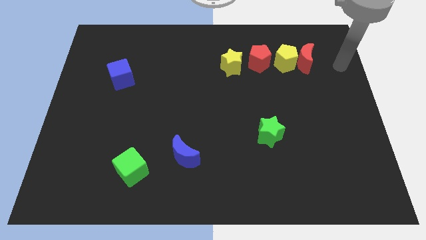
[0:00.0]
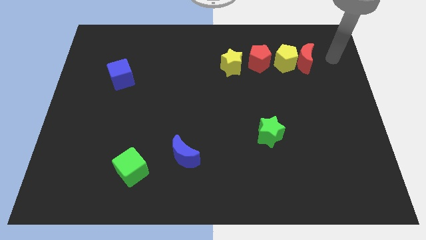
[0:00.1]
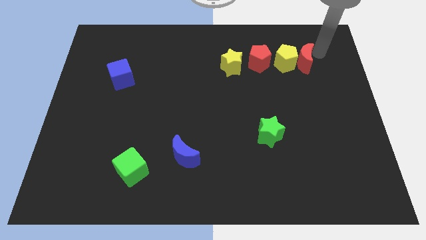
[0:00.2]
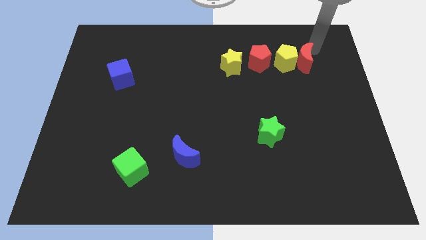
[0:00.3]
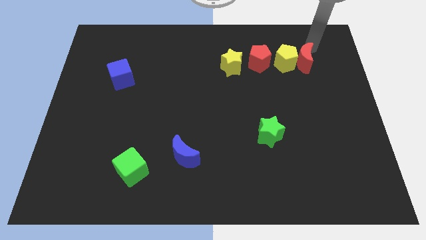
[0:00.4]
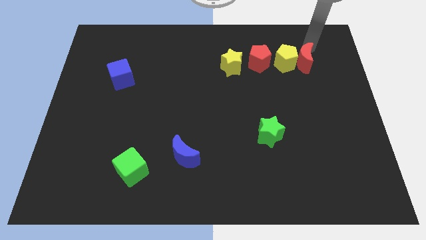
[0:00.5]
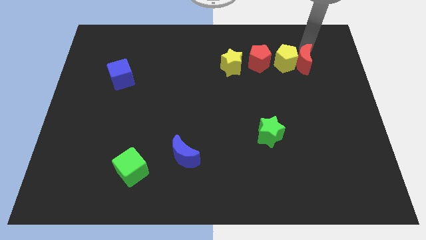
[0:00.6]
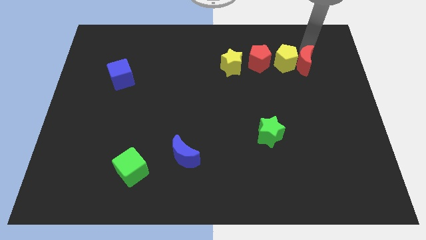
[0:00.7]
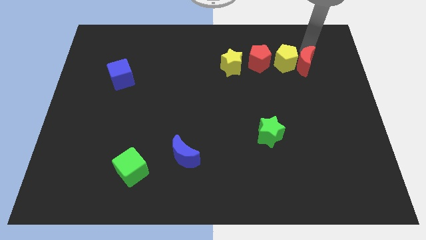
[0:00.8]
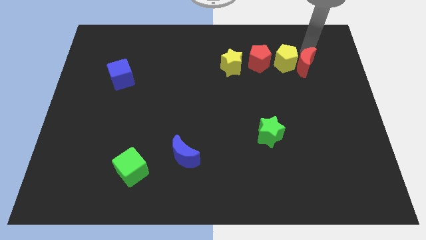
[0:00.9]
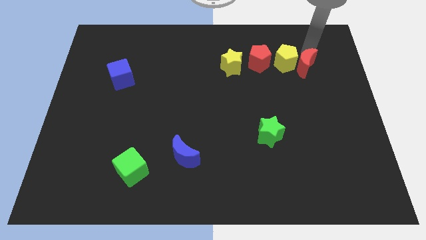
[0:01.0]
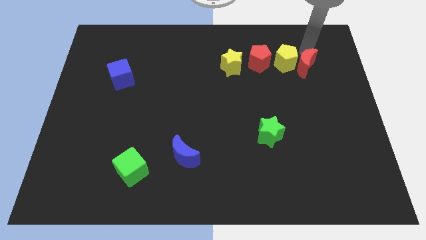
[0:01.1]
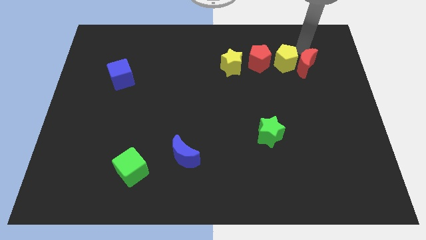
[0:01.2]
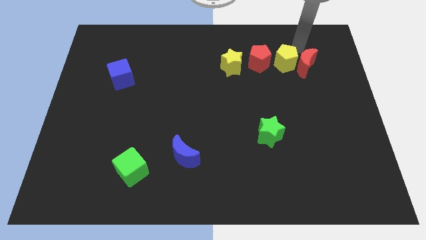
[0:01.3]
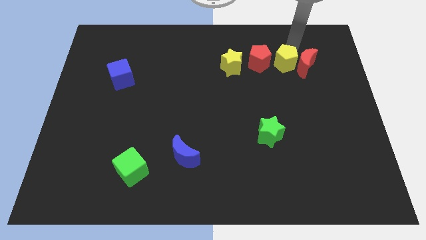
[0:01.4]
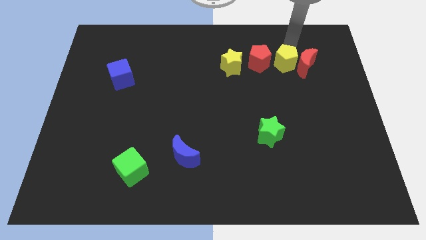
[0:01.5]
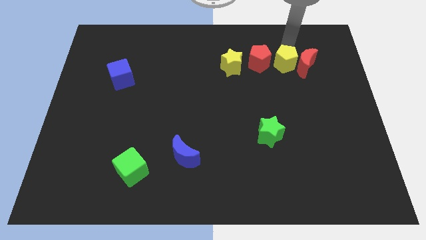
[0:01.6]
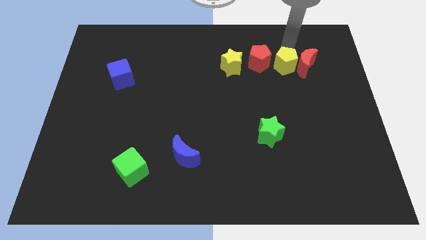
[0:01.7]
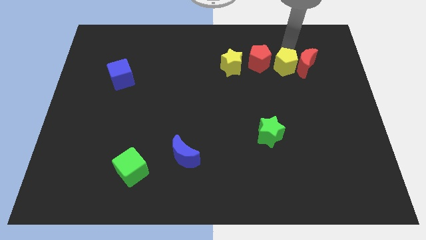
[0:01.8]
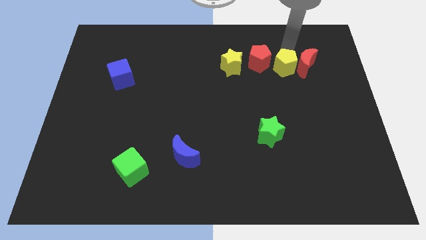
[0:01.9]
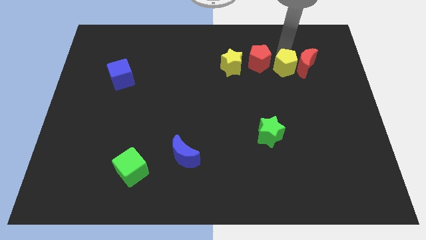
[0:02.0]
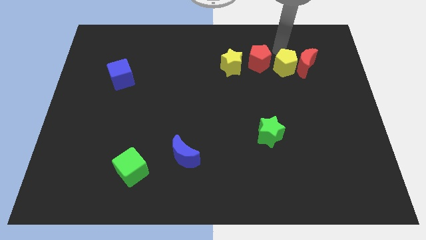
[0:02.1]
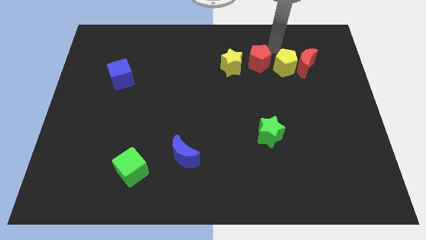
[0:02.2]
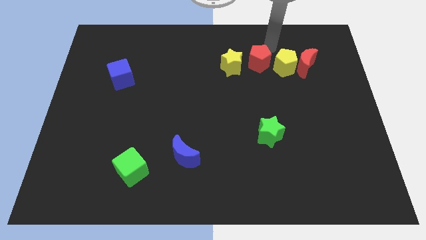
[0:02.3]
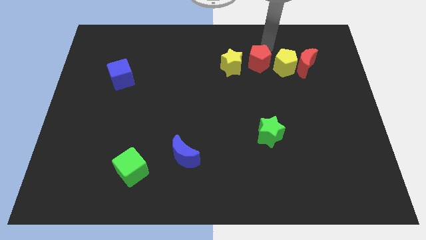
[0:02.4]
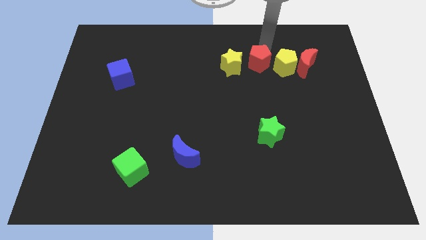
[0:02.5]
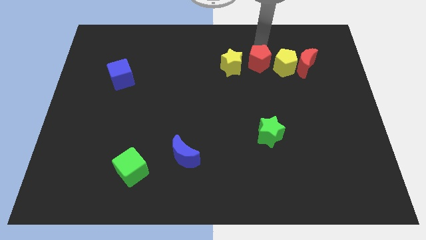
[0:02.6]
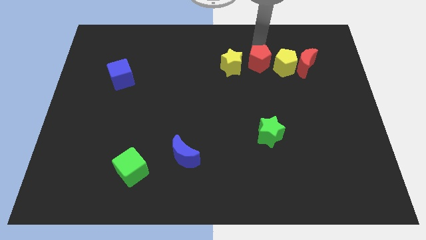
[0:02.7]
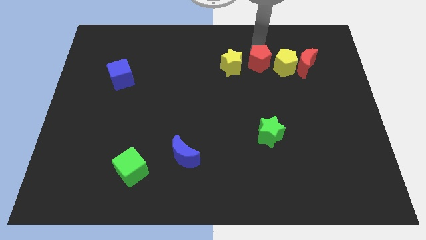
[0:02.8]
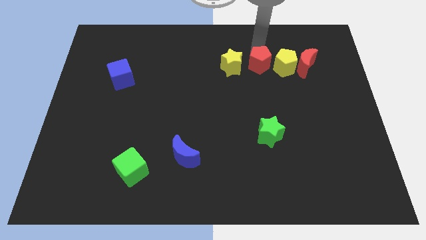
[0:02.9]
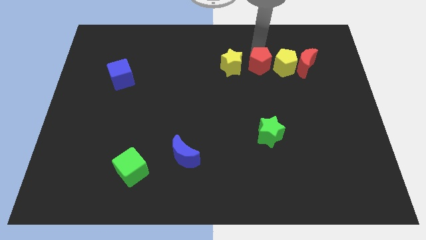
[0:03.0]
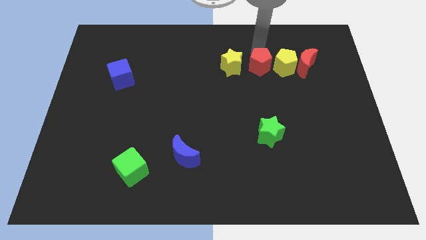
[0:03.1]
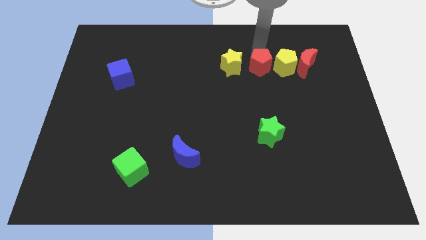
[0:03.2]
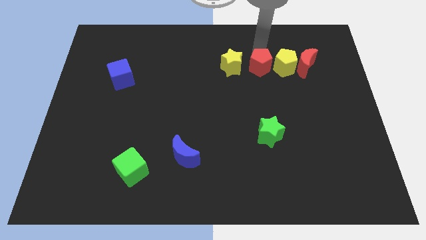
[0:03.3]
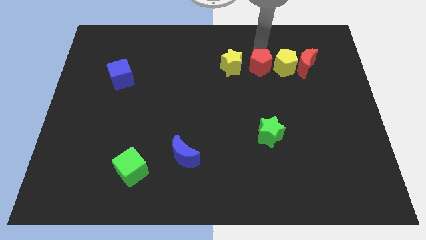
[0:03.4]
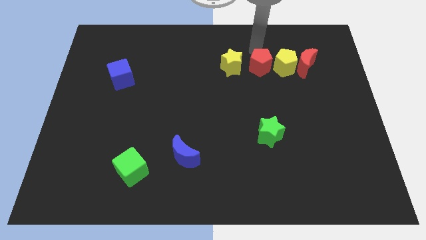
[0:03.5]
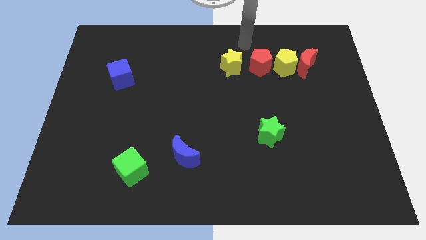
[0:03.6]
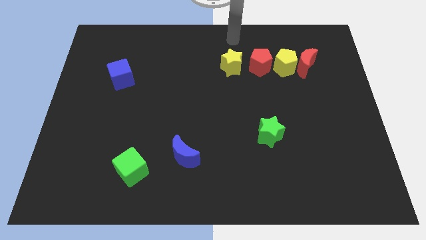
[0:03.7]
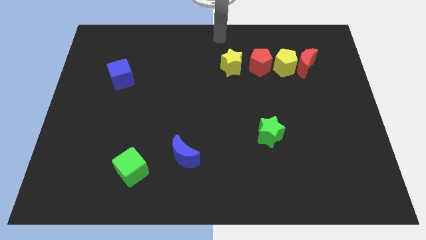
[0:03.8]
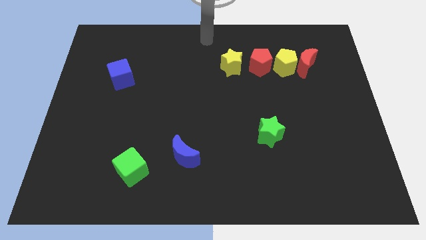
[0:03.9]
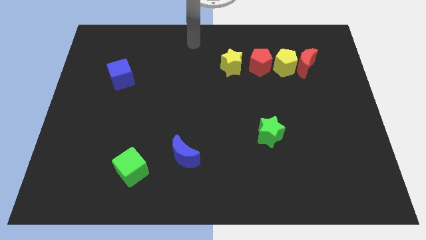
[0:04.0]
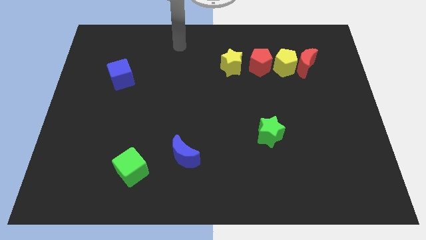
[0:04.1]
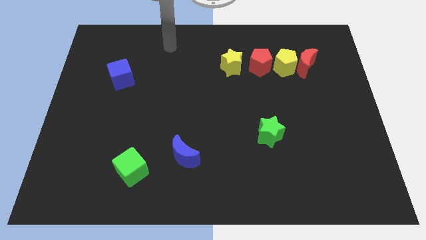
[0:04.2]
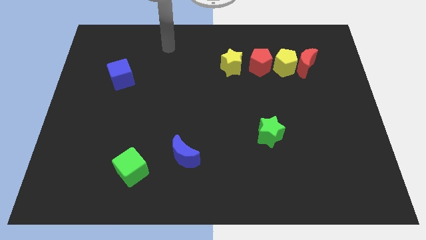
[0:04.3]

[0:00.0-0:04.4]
touch the top of the red crescentyellow pentagon and red pentagon

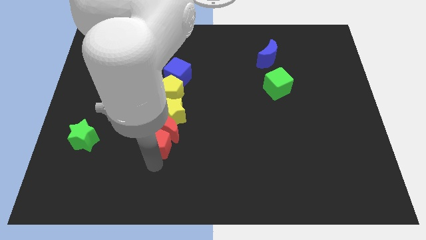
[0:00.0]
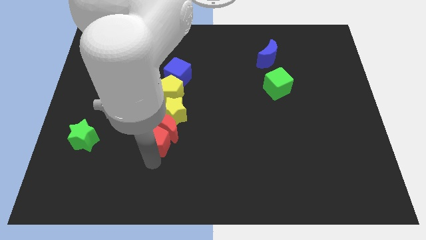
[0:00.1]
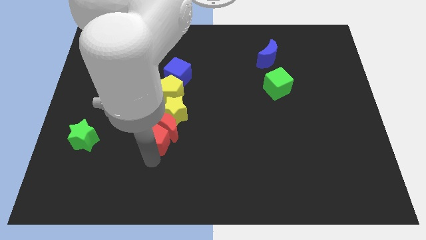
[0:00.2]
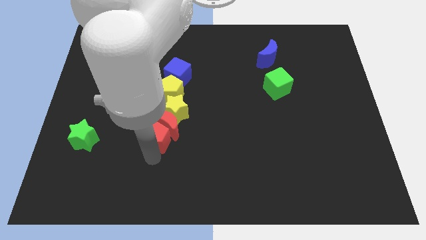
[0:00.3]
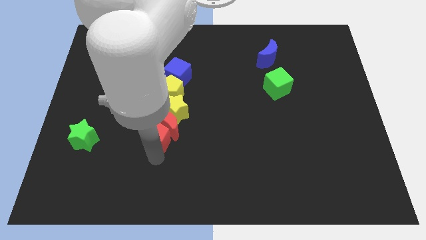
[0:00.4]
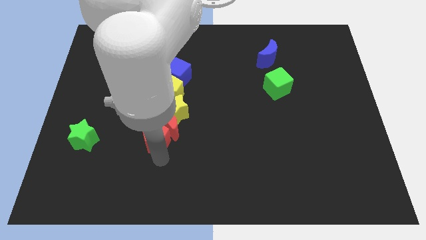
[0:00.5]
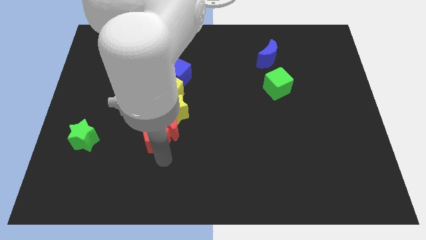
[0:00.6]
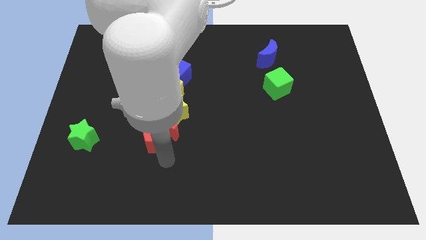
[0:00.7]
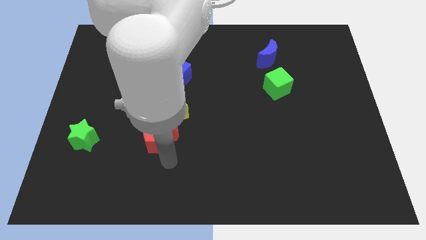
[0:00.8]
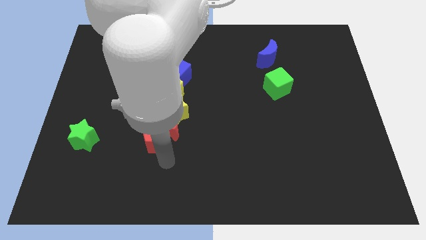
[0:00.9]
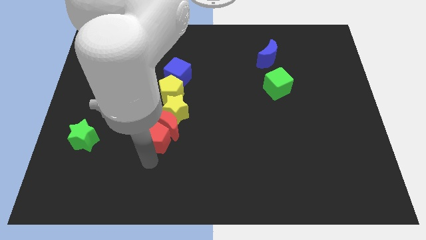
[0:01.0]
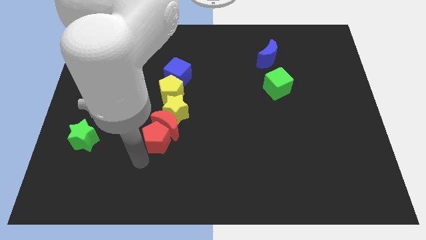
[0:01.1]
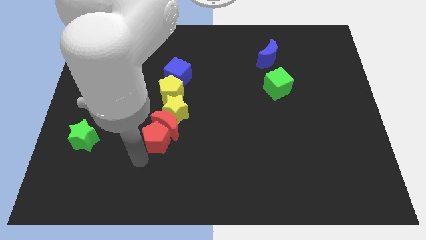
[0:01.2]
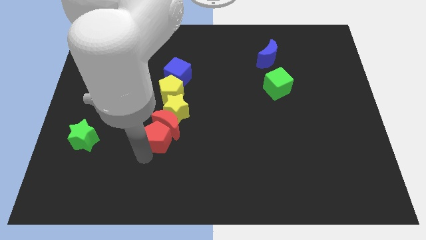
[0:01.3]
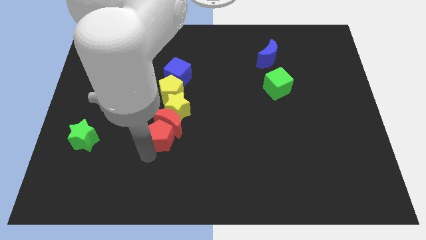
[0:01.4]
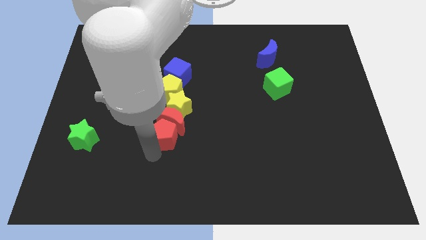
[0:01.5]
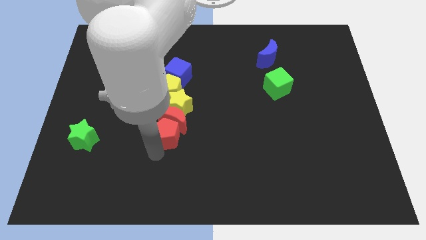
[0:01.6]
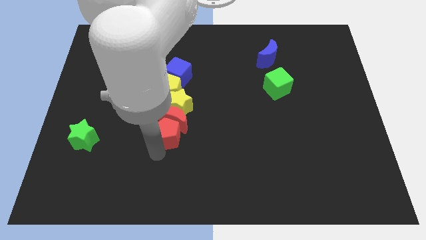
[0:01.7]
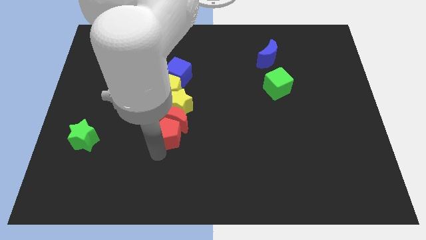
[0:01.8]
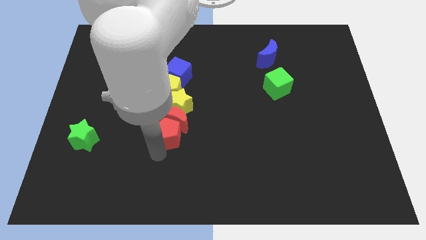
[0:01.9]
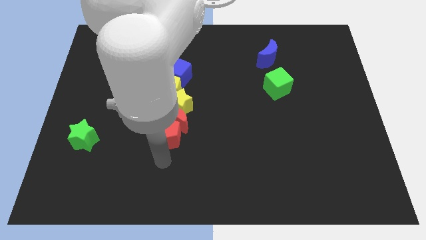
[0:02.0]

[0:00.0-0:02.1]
move red crescent with red pentagon

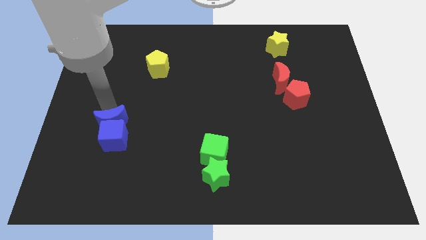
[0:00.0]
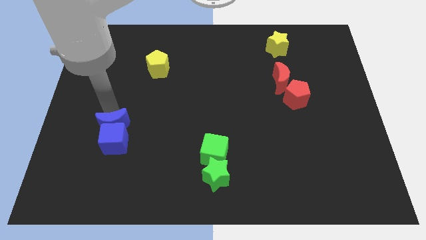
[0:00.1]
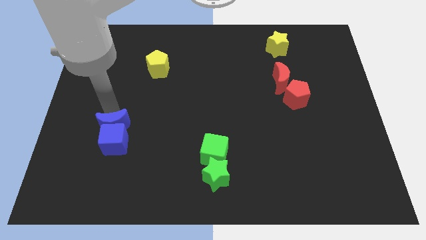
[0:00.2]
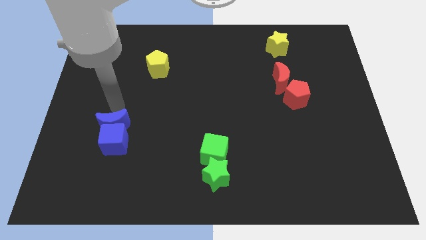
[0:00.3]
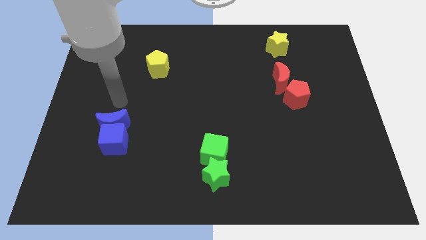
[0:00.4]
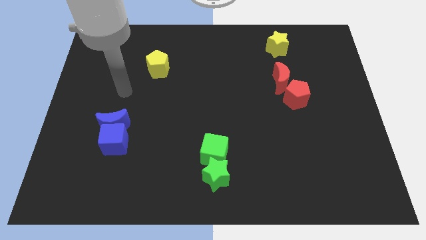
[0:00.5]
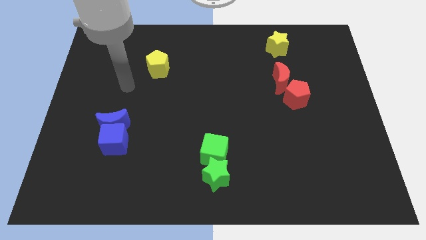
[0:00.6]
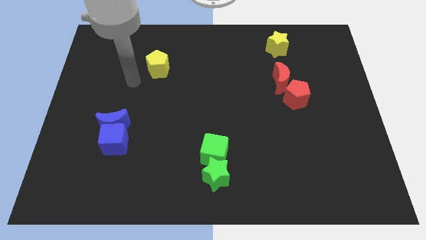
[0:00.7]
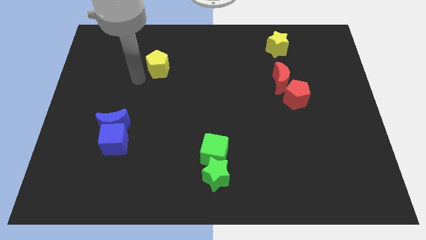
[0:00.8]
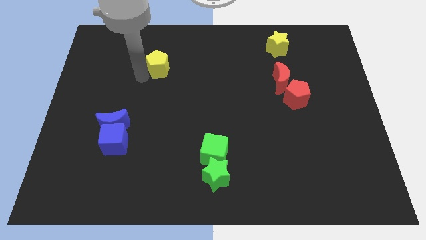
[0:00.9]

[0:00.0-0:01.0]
go away from the blue moon

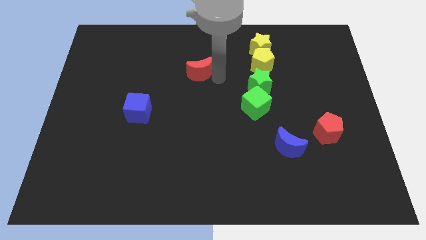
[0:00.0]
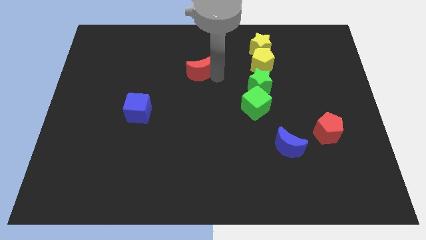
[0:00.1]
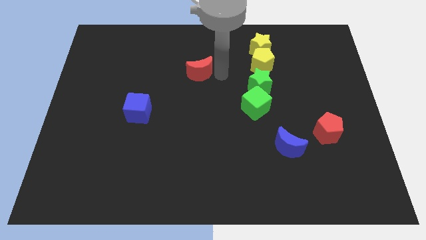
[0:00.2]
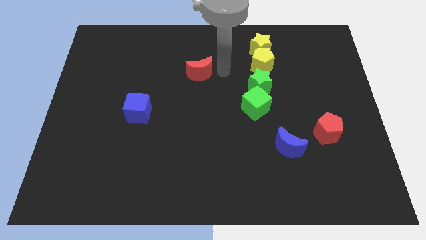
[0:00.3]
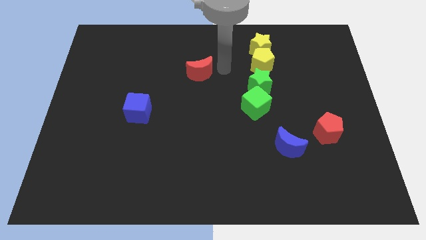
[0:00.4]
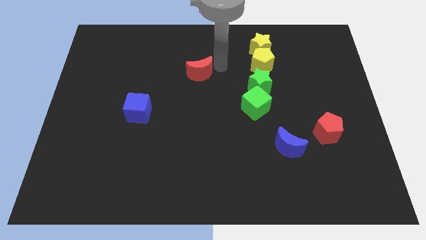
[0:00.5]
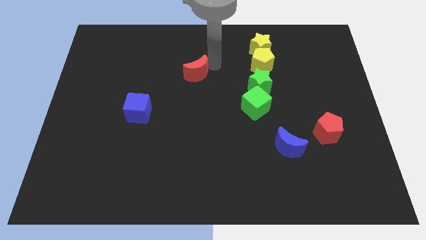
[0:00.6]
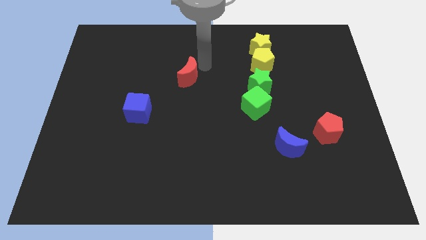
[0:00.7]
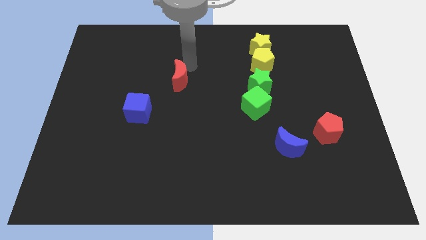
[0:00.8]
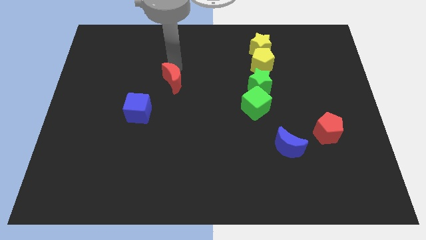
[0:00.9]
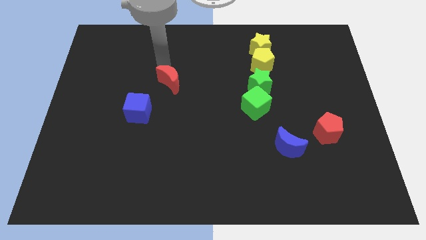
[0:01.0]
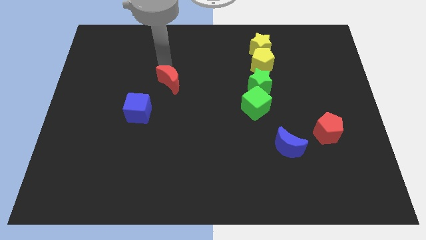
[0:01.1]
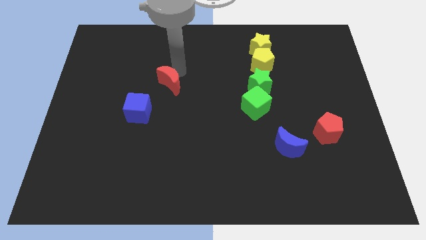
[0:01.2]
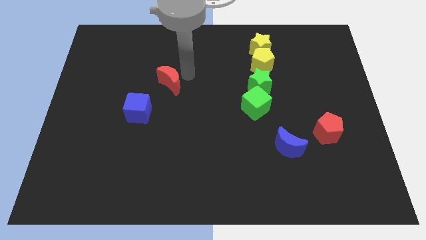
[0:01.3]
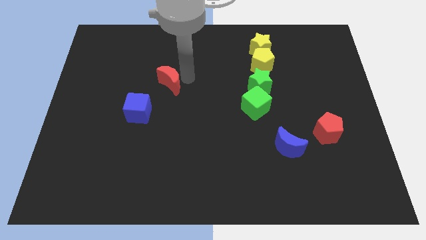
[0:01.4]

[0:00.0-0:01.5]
place the red moon at the top right side of blue cube
